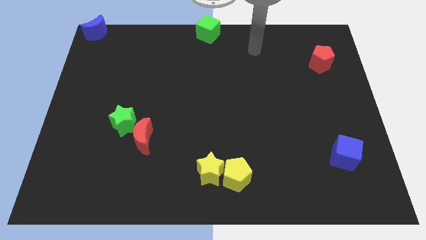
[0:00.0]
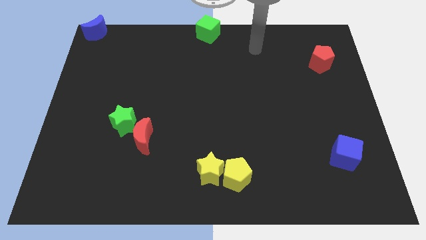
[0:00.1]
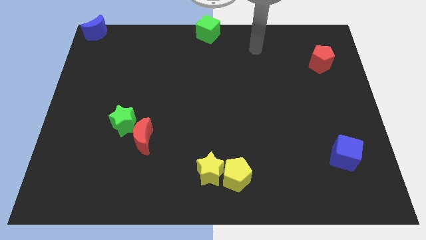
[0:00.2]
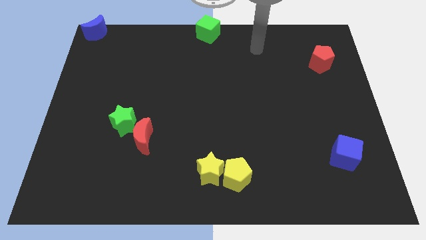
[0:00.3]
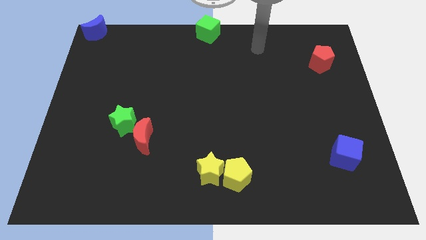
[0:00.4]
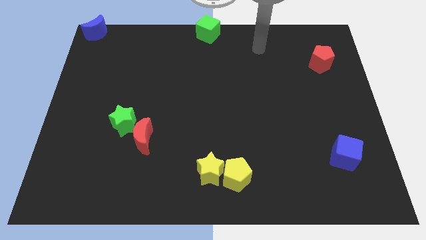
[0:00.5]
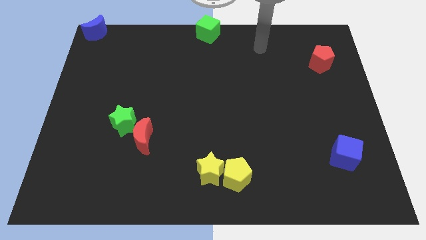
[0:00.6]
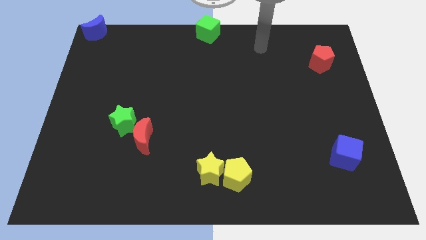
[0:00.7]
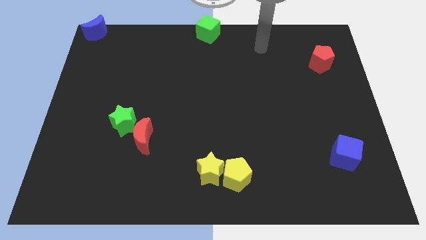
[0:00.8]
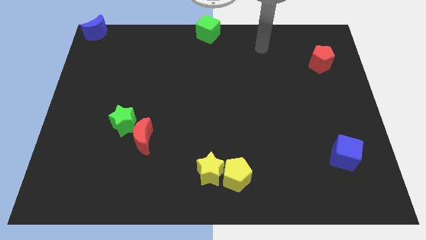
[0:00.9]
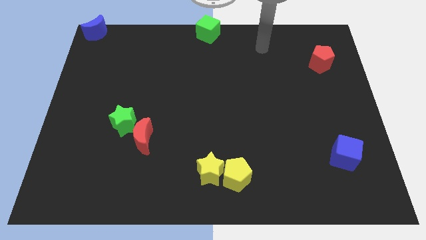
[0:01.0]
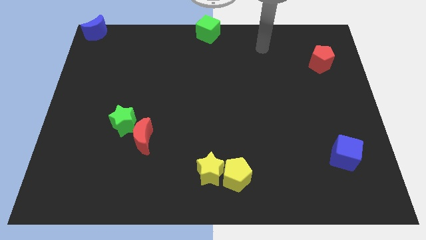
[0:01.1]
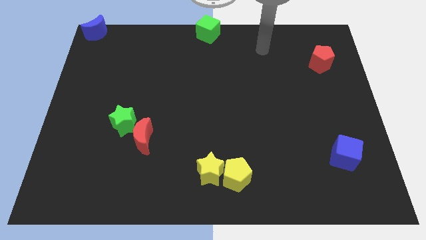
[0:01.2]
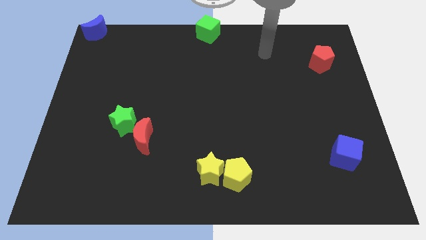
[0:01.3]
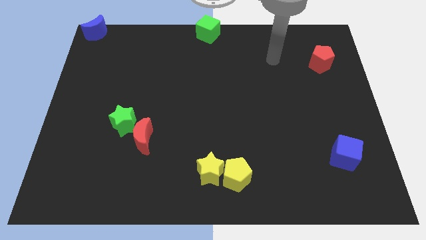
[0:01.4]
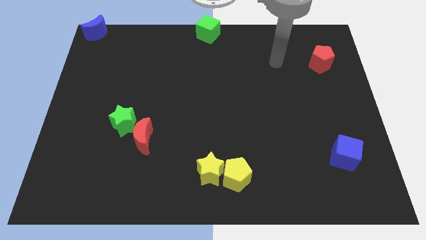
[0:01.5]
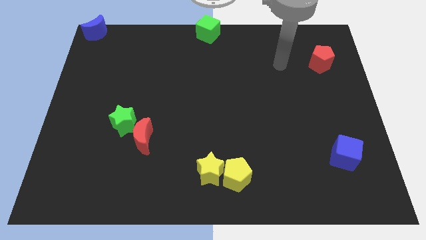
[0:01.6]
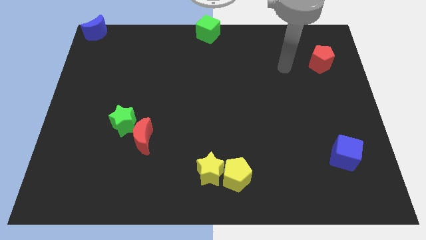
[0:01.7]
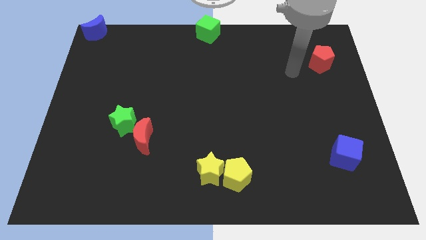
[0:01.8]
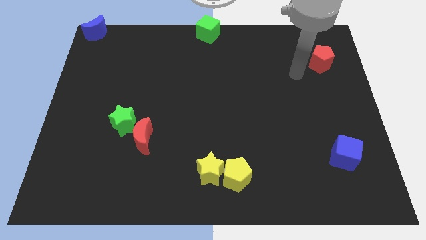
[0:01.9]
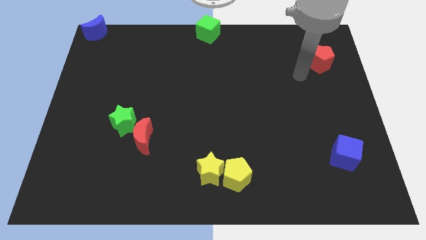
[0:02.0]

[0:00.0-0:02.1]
move your arm to the left below the red pentagon

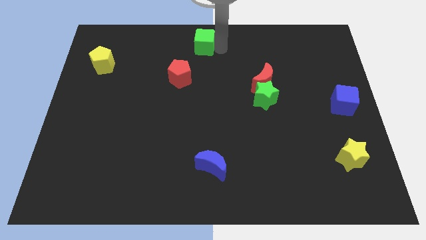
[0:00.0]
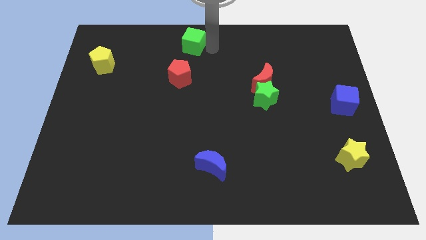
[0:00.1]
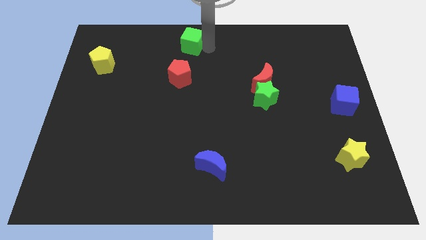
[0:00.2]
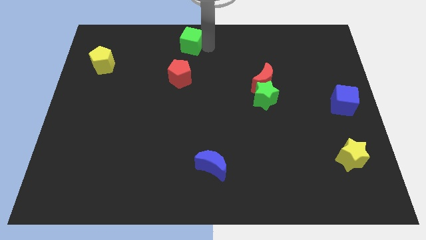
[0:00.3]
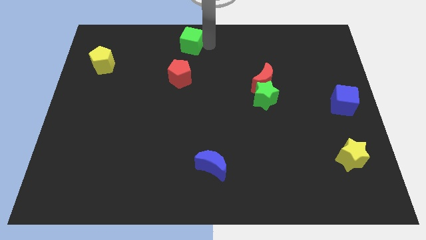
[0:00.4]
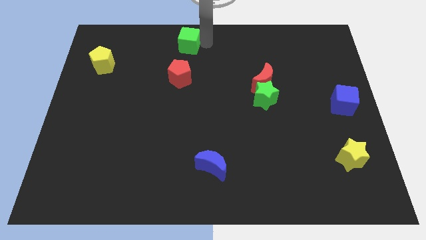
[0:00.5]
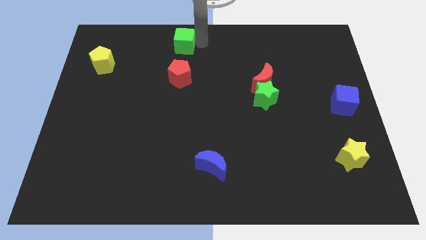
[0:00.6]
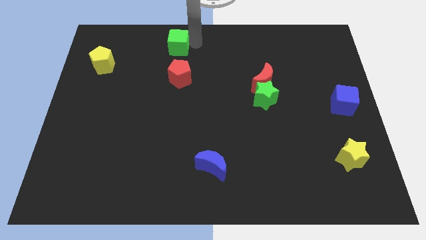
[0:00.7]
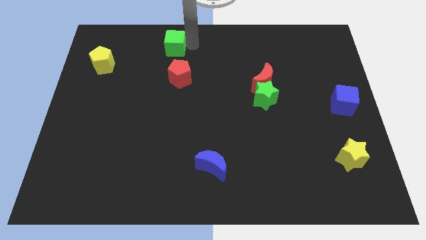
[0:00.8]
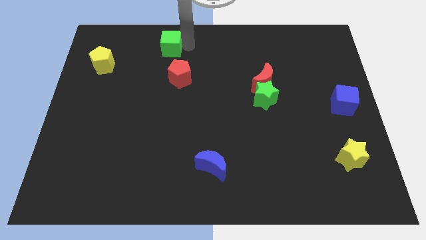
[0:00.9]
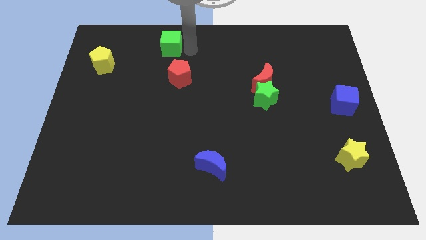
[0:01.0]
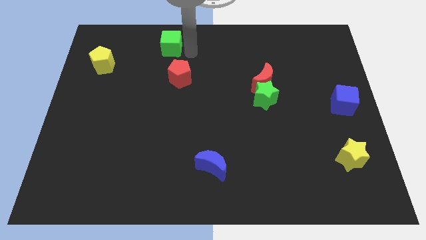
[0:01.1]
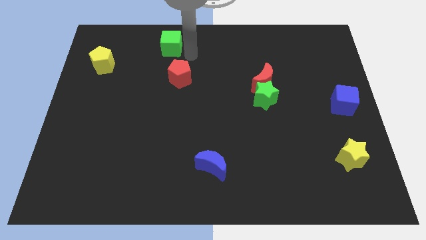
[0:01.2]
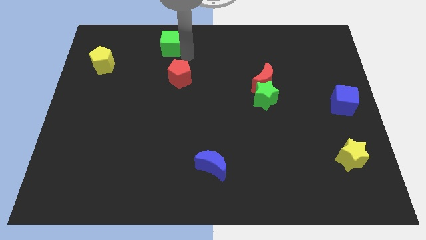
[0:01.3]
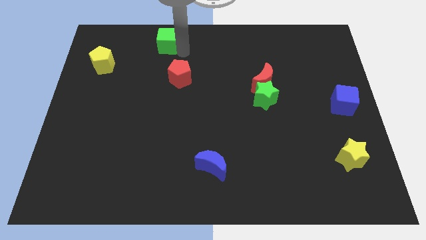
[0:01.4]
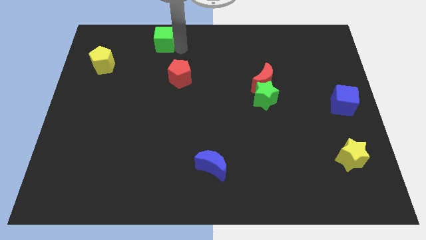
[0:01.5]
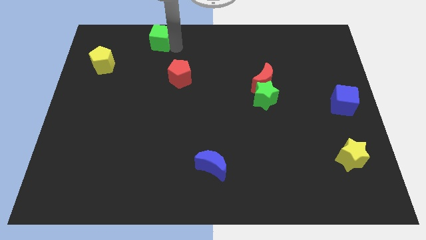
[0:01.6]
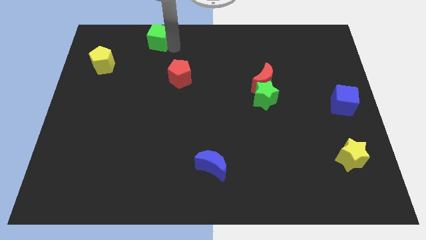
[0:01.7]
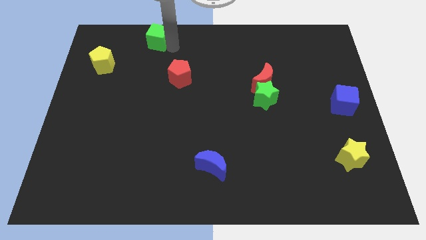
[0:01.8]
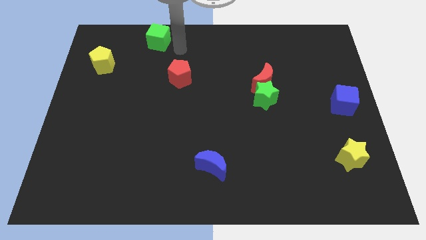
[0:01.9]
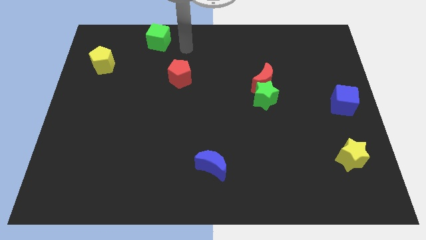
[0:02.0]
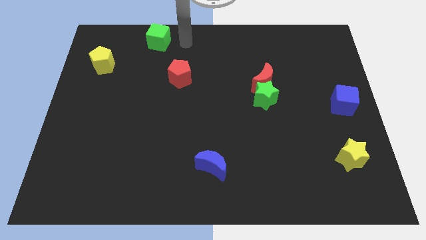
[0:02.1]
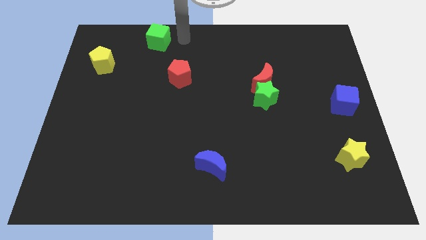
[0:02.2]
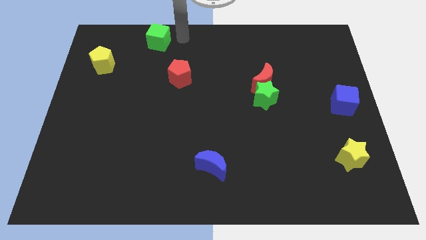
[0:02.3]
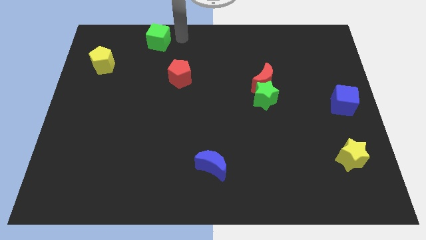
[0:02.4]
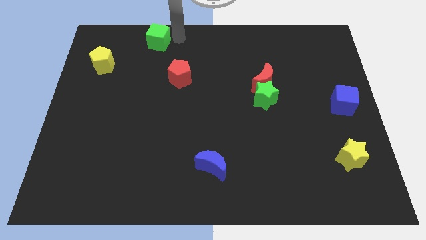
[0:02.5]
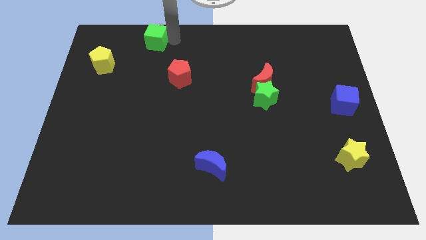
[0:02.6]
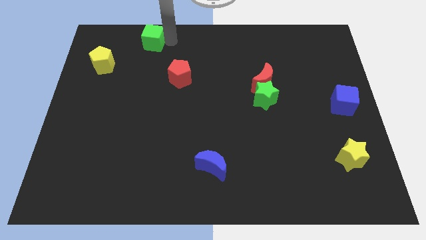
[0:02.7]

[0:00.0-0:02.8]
move the green cube to the center top of the yellow and red pentagons

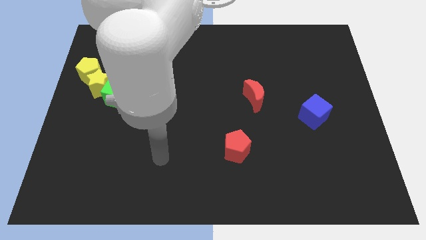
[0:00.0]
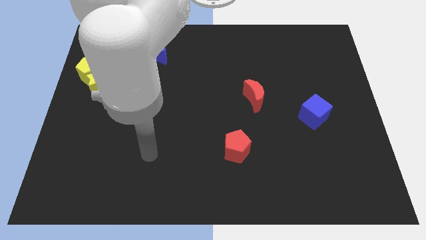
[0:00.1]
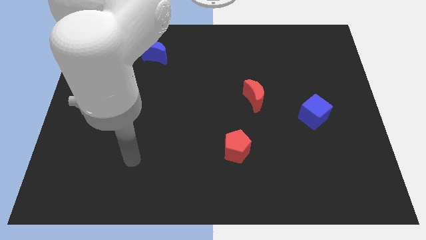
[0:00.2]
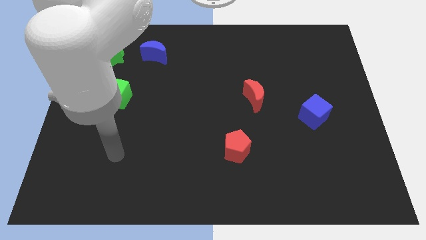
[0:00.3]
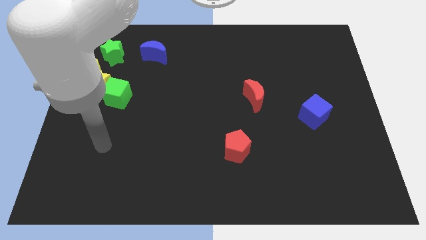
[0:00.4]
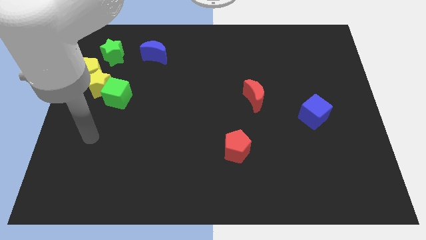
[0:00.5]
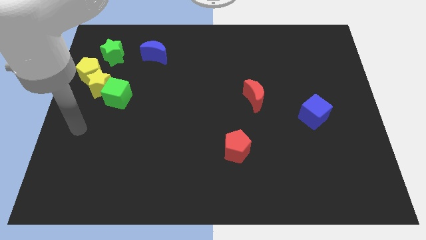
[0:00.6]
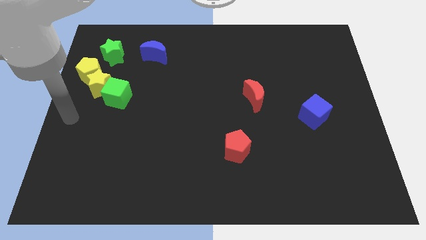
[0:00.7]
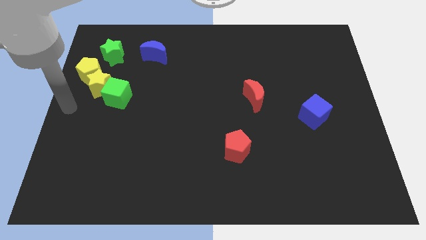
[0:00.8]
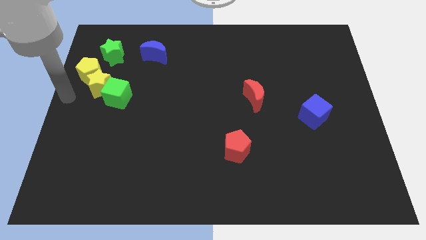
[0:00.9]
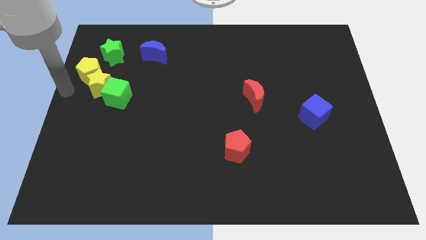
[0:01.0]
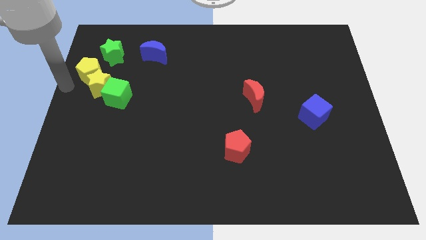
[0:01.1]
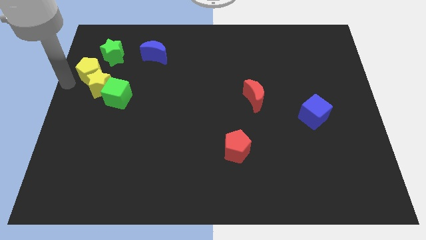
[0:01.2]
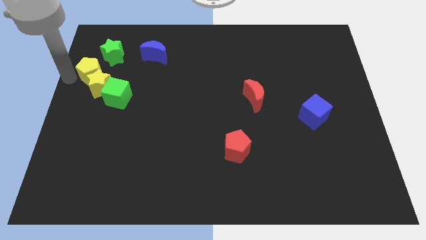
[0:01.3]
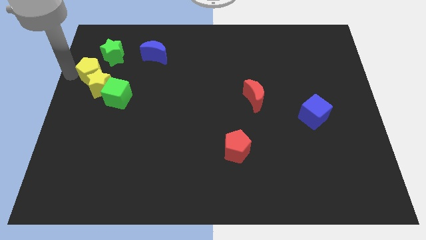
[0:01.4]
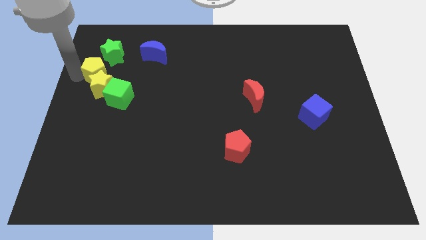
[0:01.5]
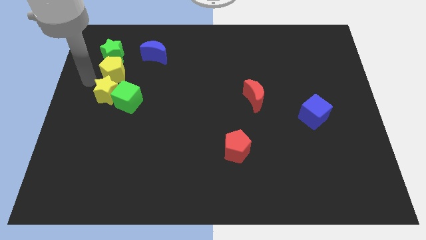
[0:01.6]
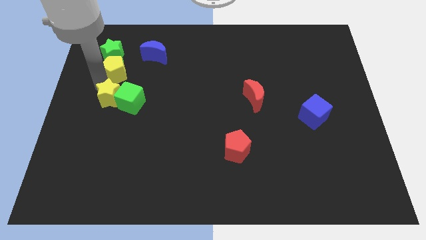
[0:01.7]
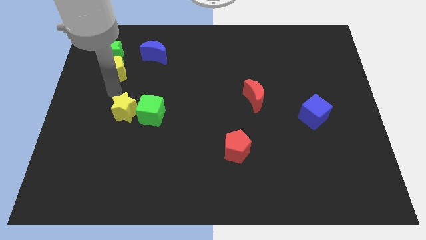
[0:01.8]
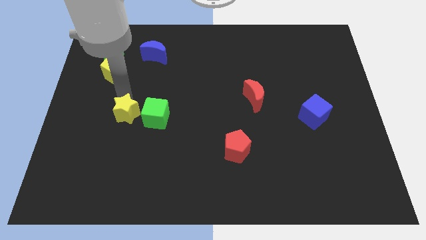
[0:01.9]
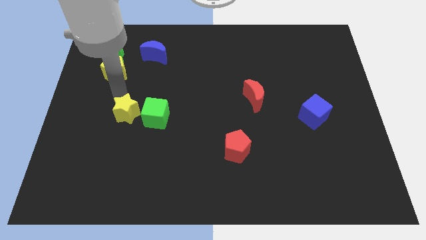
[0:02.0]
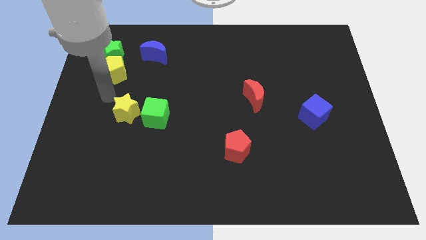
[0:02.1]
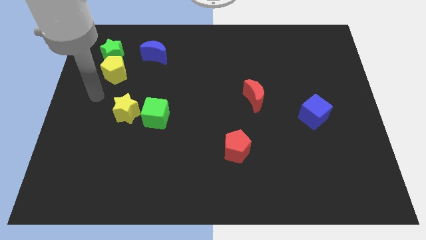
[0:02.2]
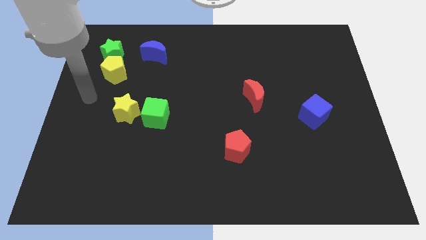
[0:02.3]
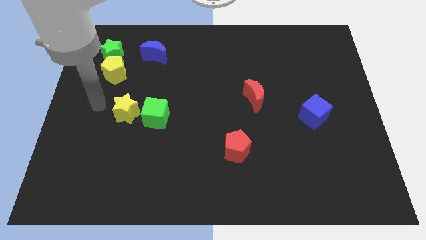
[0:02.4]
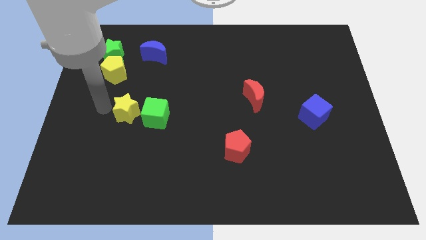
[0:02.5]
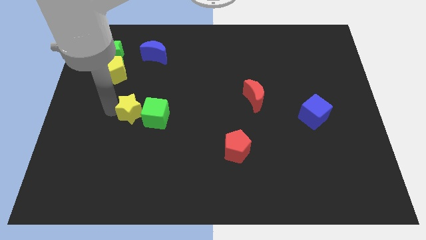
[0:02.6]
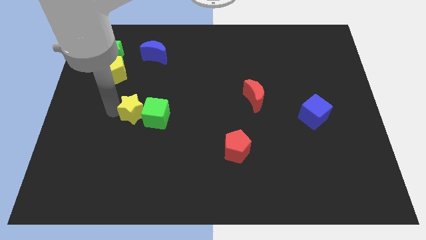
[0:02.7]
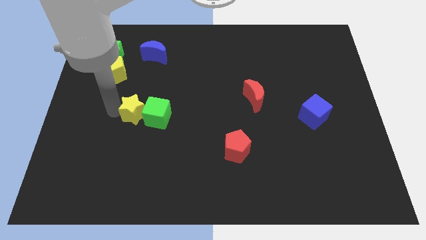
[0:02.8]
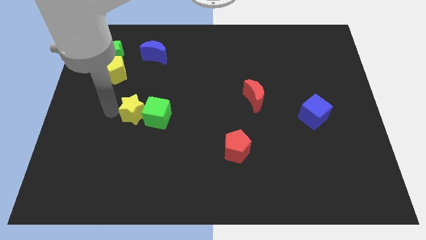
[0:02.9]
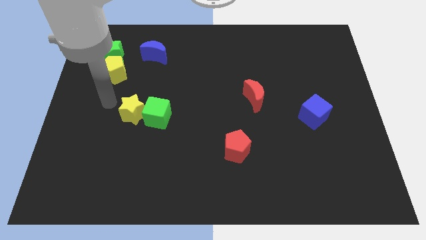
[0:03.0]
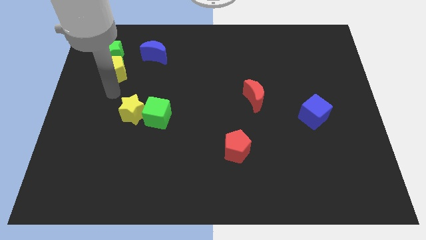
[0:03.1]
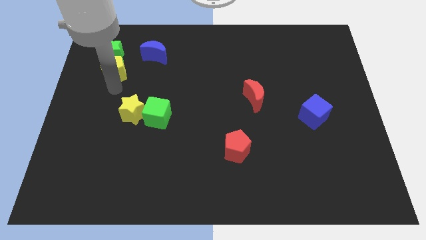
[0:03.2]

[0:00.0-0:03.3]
separate the yellow star and green cube from the yellow pentagon

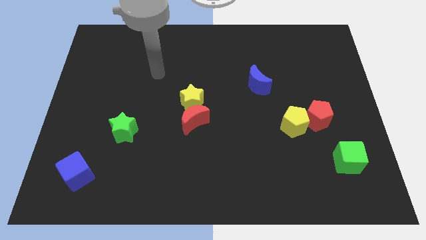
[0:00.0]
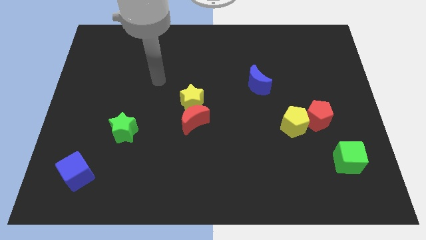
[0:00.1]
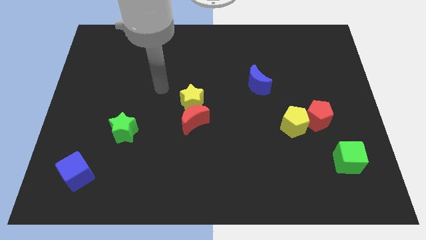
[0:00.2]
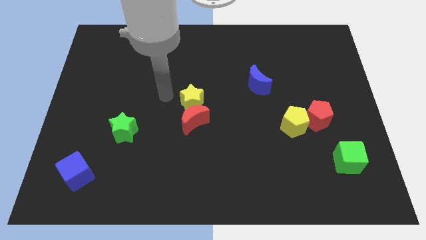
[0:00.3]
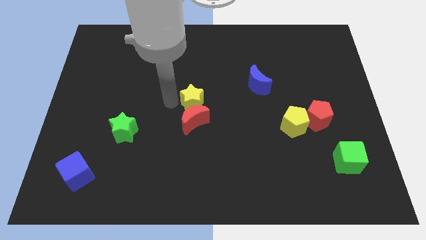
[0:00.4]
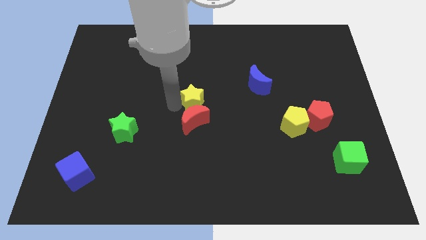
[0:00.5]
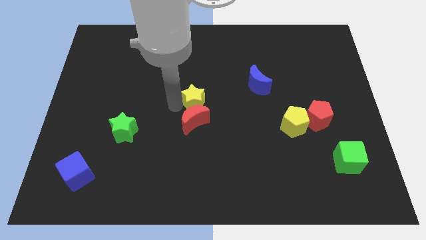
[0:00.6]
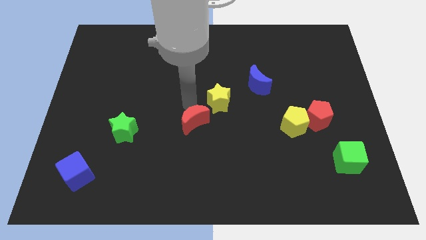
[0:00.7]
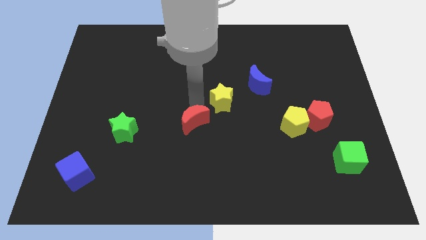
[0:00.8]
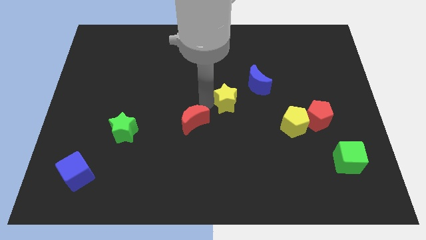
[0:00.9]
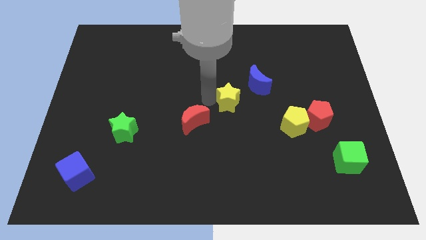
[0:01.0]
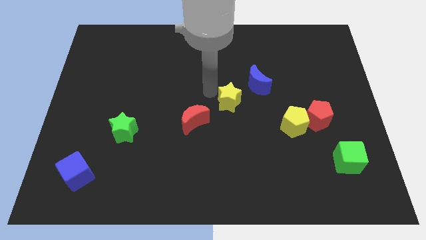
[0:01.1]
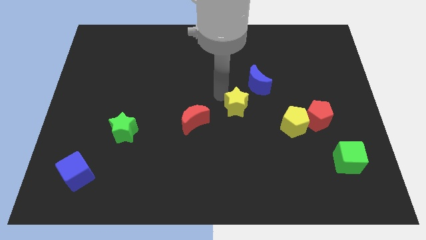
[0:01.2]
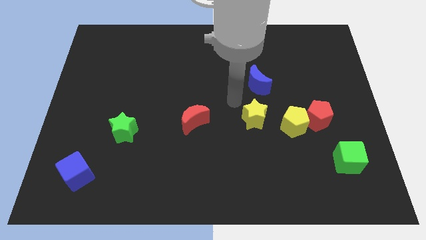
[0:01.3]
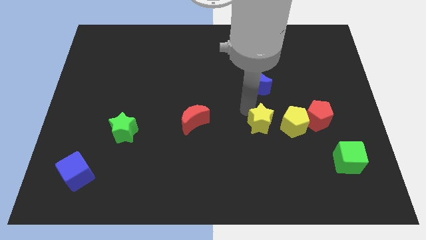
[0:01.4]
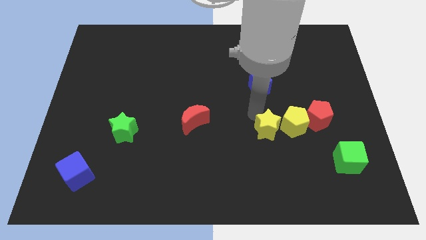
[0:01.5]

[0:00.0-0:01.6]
move the yellow star to the left of yellow pentagon
